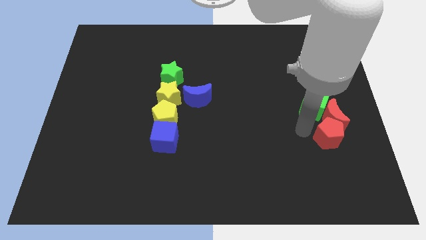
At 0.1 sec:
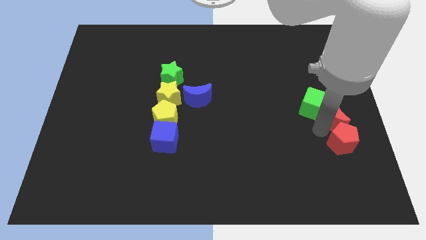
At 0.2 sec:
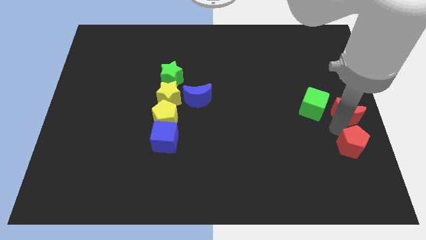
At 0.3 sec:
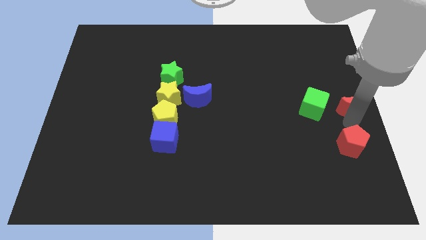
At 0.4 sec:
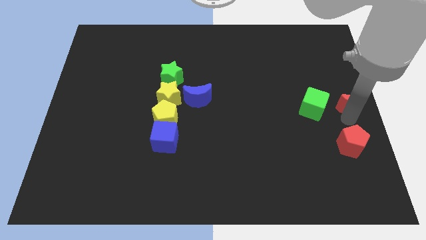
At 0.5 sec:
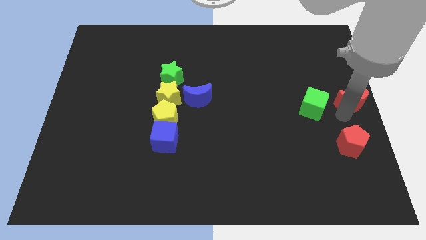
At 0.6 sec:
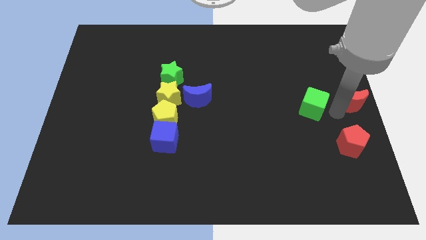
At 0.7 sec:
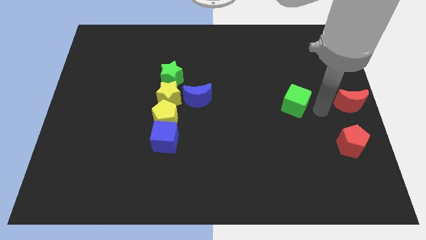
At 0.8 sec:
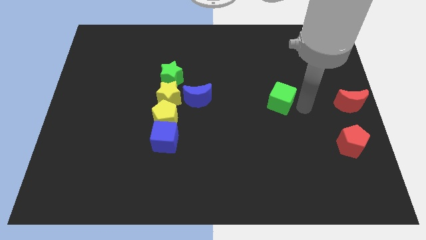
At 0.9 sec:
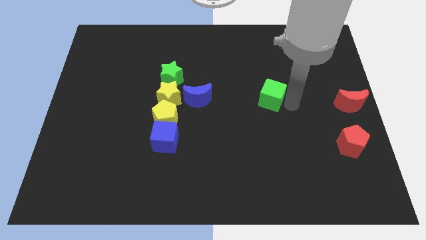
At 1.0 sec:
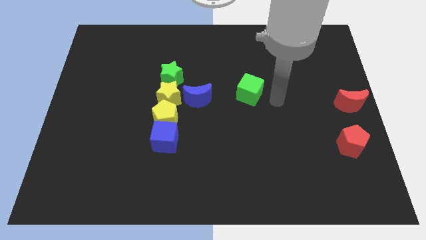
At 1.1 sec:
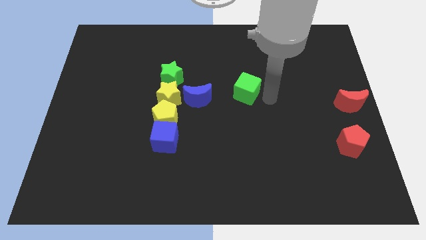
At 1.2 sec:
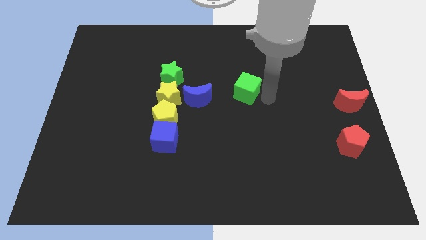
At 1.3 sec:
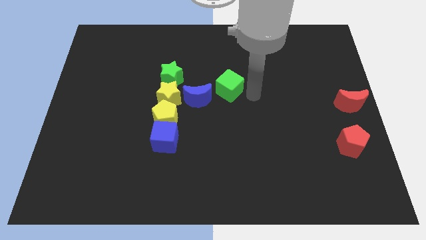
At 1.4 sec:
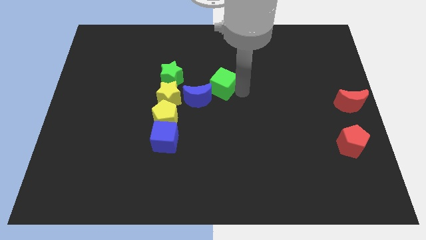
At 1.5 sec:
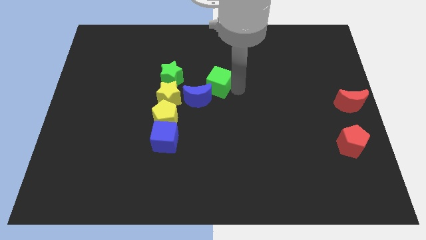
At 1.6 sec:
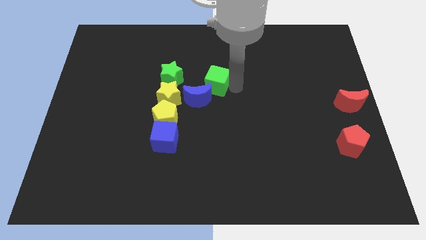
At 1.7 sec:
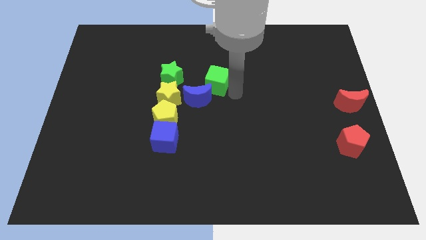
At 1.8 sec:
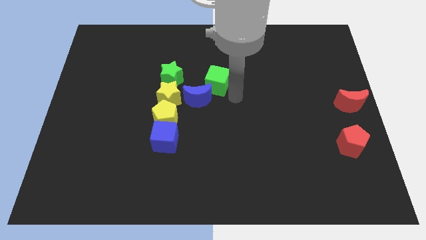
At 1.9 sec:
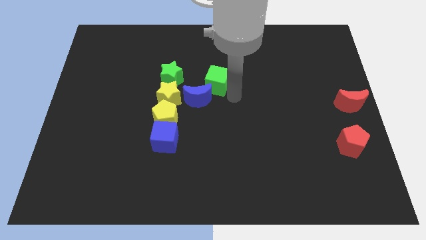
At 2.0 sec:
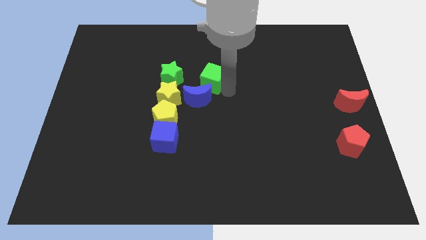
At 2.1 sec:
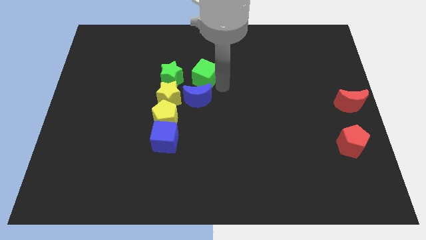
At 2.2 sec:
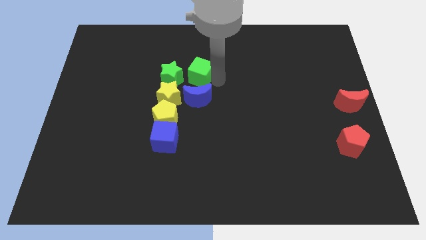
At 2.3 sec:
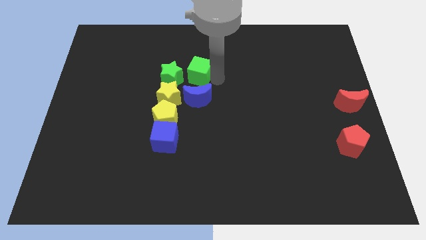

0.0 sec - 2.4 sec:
place the green cube right to the green star

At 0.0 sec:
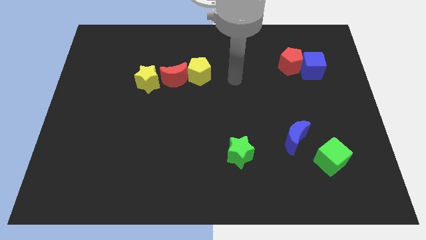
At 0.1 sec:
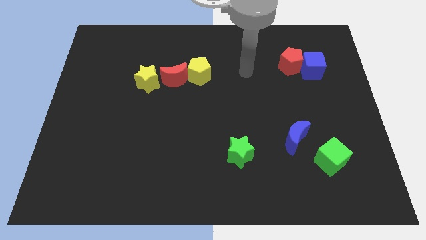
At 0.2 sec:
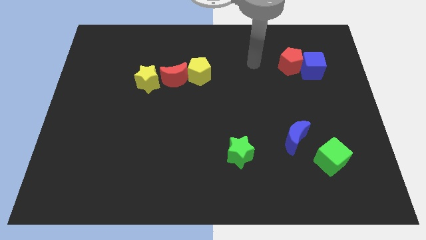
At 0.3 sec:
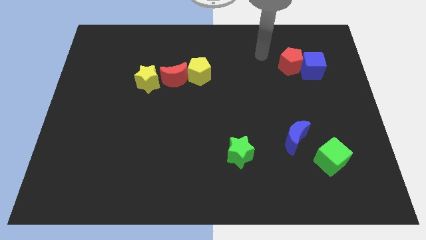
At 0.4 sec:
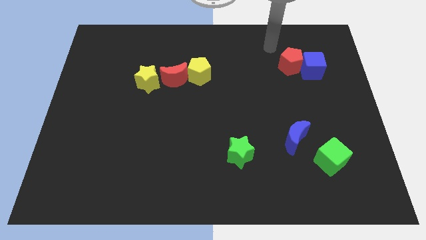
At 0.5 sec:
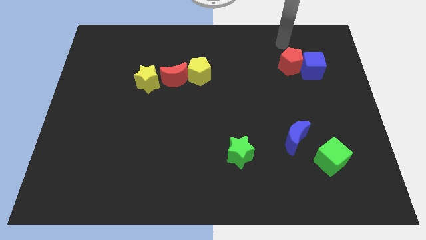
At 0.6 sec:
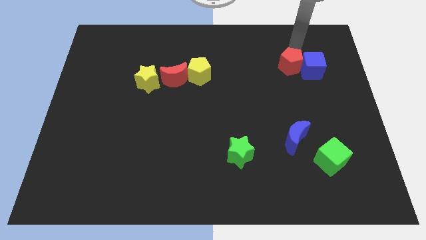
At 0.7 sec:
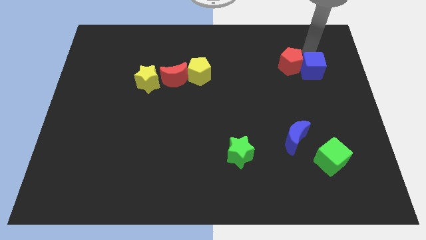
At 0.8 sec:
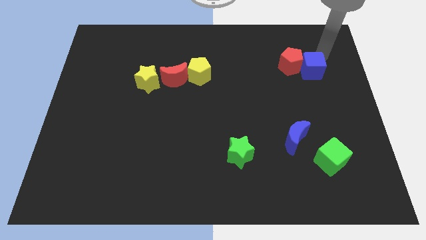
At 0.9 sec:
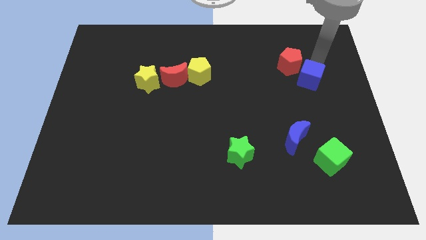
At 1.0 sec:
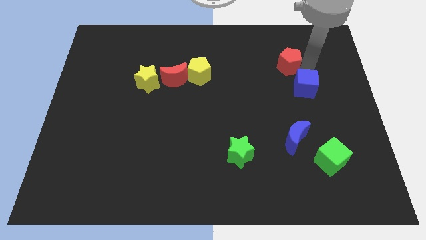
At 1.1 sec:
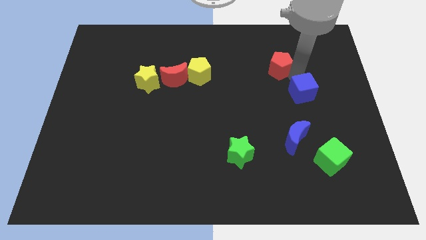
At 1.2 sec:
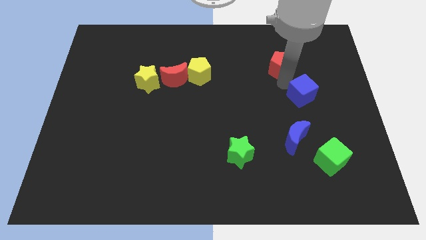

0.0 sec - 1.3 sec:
separate the blue cube from red pentagon

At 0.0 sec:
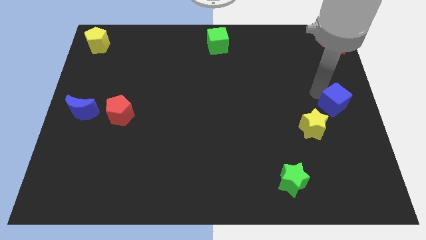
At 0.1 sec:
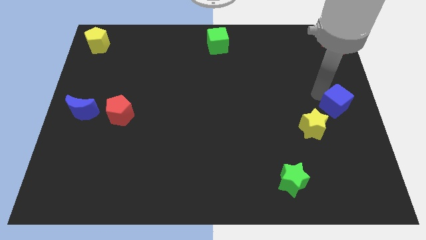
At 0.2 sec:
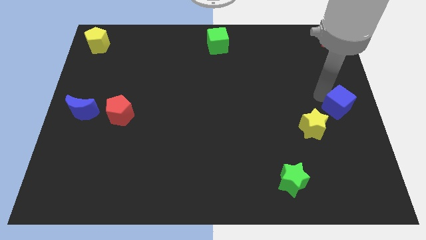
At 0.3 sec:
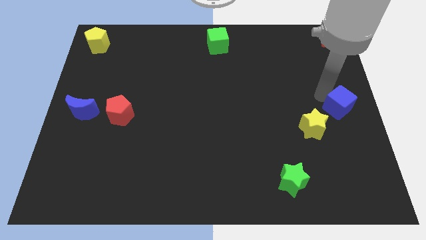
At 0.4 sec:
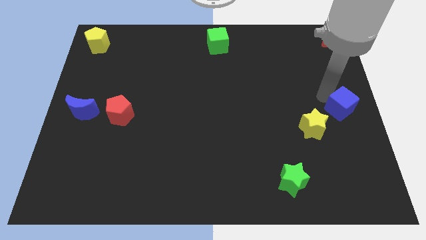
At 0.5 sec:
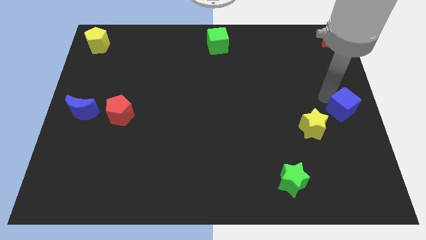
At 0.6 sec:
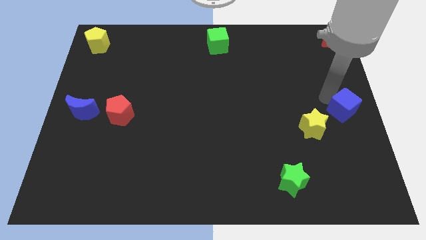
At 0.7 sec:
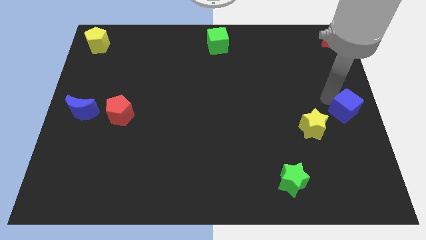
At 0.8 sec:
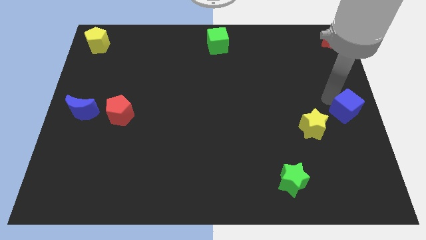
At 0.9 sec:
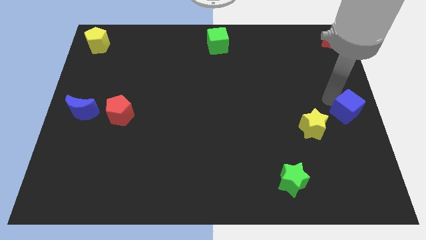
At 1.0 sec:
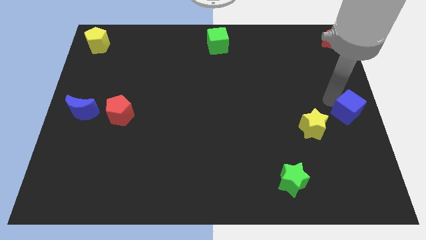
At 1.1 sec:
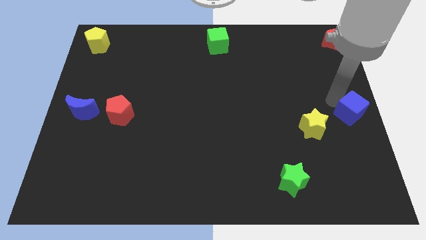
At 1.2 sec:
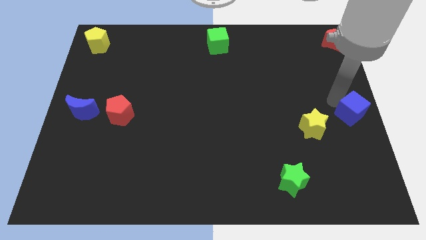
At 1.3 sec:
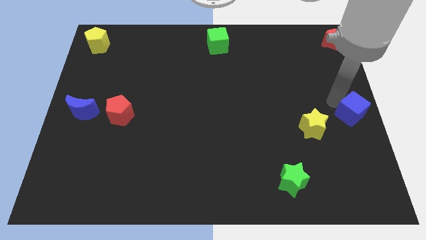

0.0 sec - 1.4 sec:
push the blue cube to the right center of the board

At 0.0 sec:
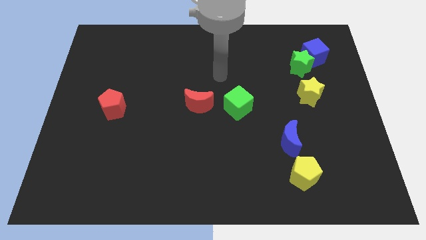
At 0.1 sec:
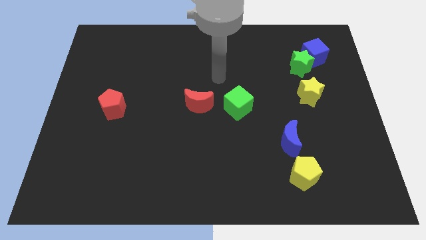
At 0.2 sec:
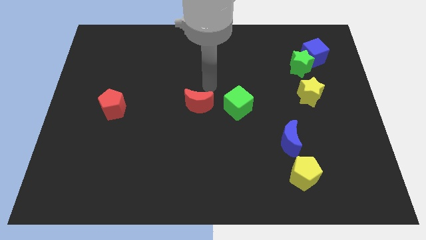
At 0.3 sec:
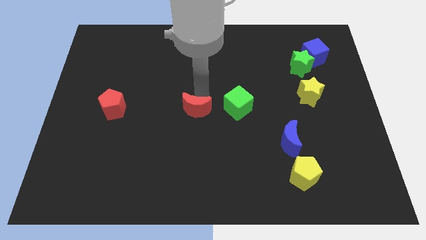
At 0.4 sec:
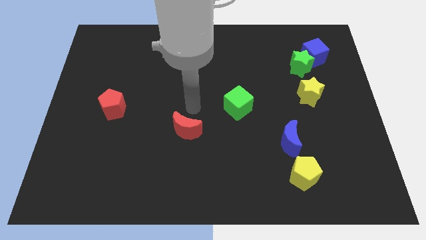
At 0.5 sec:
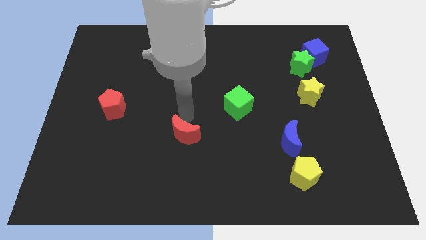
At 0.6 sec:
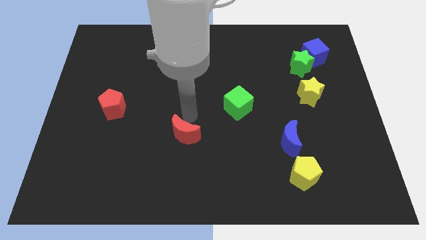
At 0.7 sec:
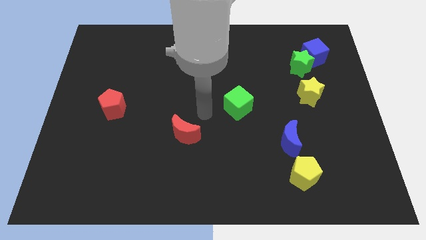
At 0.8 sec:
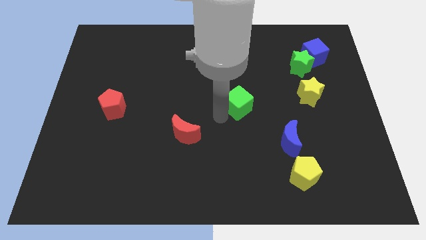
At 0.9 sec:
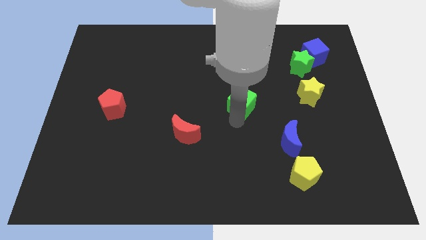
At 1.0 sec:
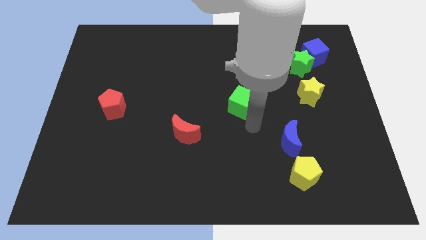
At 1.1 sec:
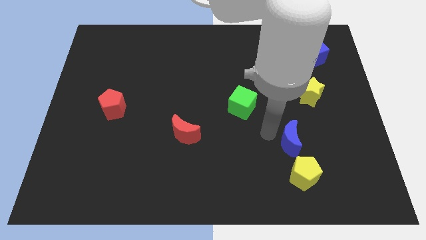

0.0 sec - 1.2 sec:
move the red crescent parallel to the left of blue crescent

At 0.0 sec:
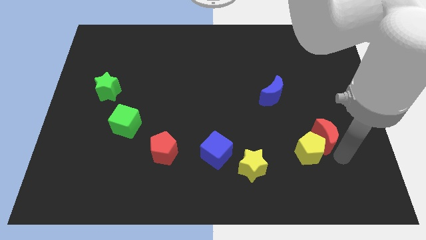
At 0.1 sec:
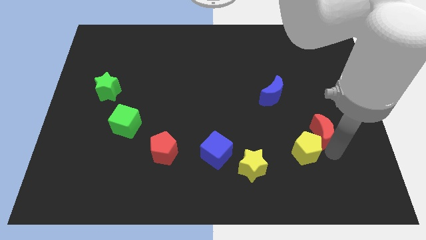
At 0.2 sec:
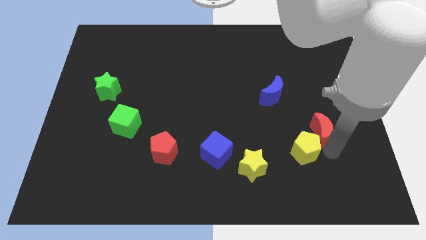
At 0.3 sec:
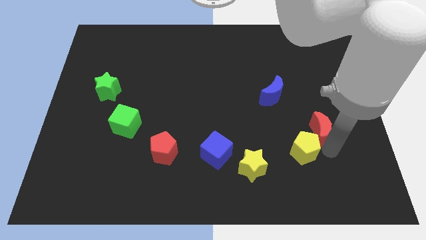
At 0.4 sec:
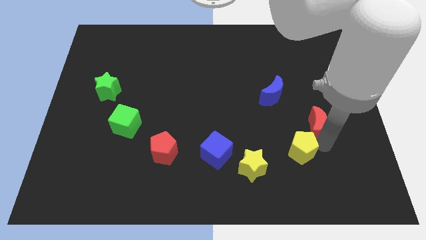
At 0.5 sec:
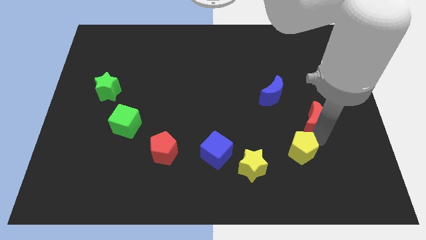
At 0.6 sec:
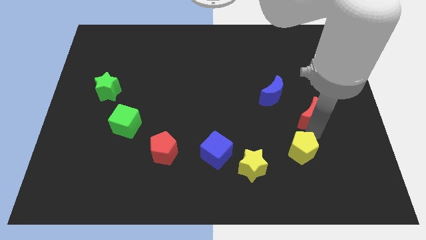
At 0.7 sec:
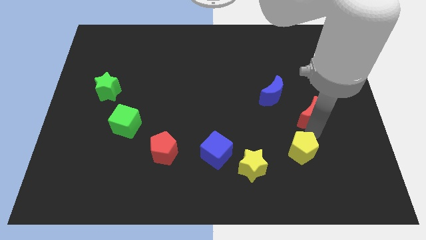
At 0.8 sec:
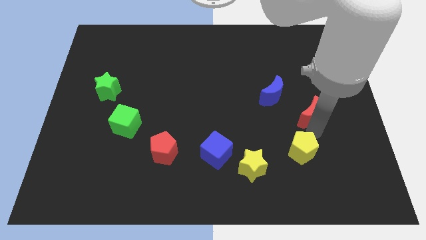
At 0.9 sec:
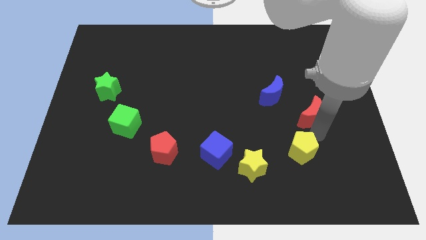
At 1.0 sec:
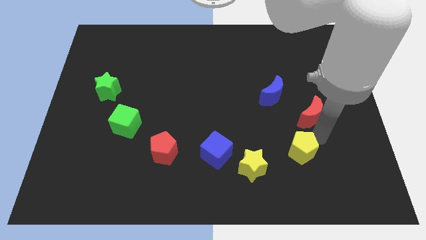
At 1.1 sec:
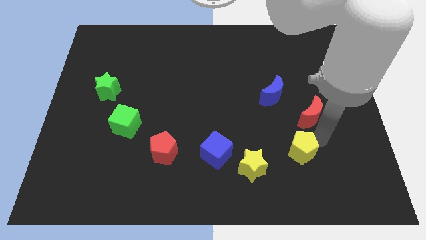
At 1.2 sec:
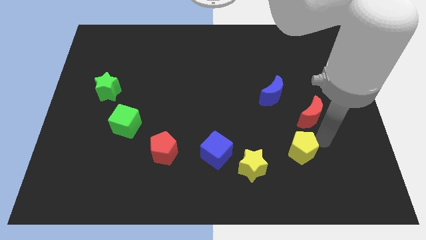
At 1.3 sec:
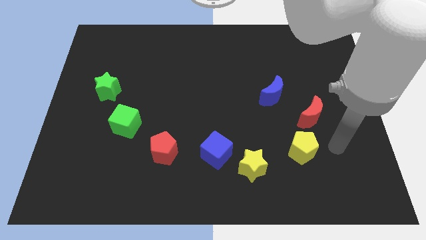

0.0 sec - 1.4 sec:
separate the red moon and the yellow pentagon

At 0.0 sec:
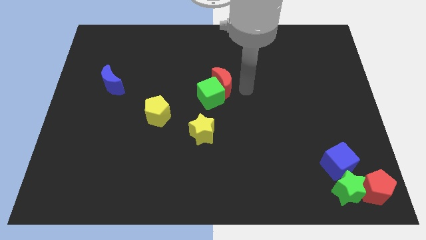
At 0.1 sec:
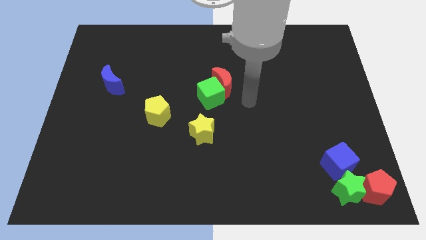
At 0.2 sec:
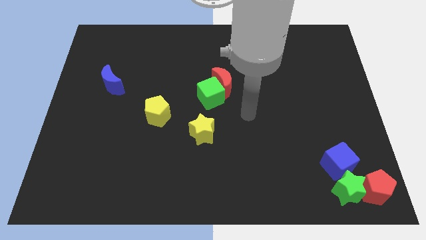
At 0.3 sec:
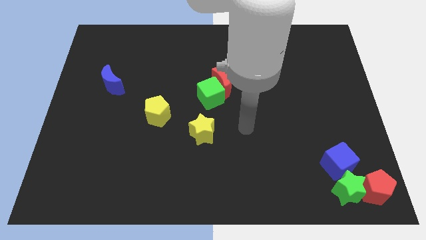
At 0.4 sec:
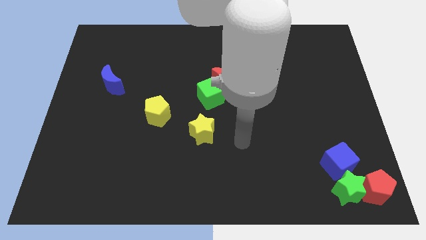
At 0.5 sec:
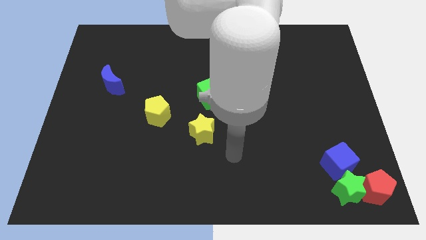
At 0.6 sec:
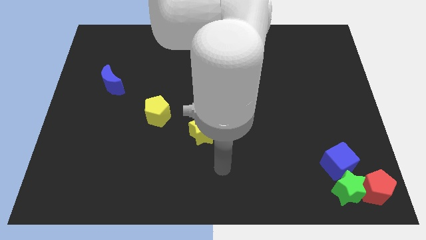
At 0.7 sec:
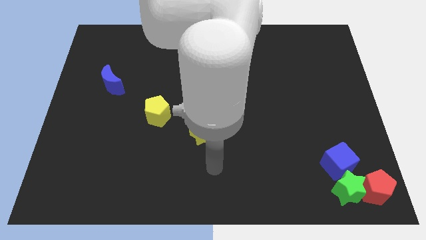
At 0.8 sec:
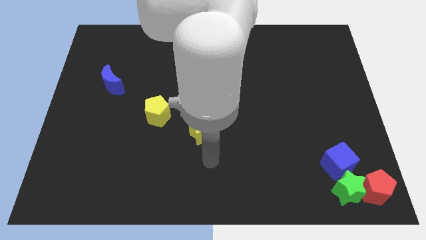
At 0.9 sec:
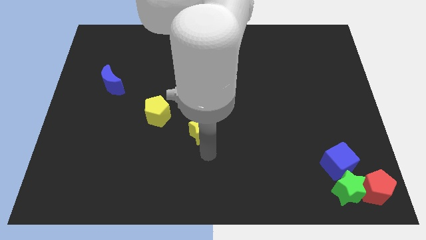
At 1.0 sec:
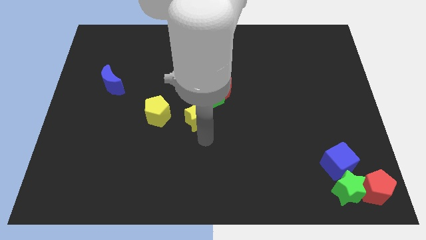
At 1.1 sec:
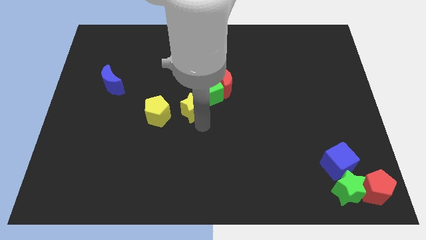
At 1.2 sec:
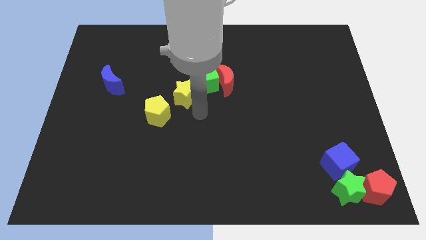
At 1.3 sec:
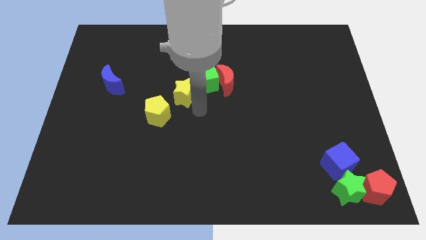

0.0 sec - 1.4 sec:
move the yellow star towards the top center of the board
